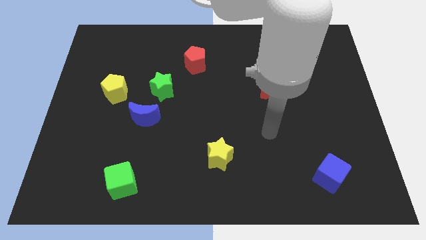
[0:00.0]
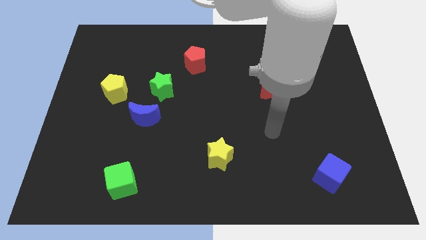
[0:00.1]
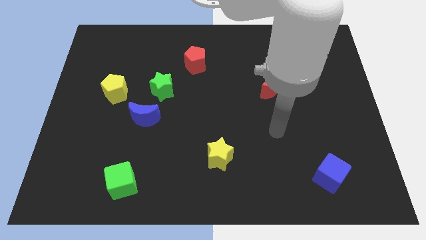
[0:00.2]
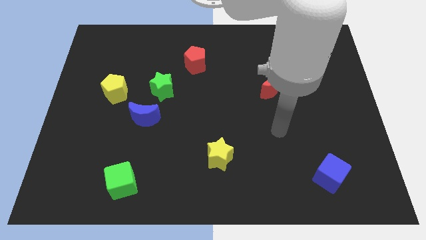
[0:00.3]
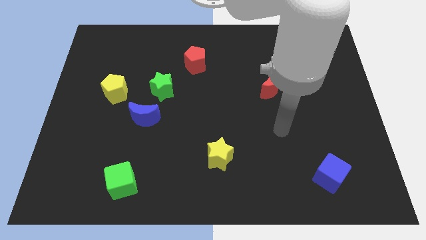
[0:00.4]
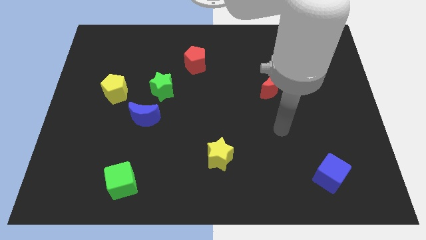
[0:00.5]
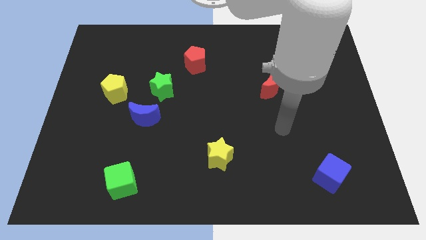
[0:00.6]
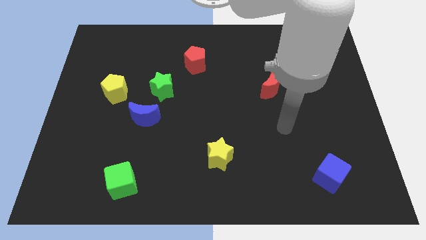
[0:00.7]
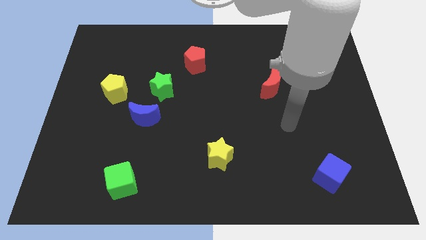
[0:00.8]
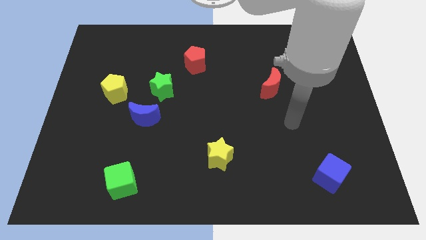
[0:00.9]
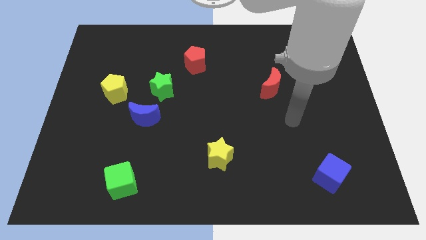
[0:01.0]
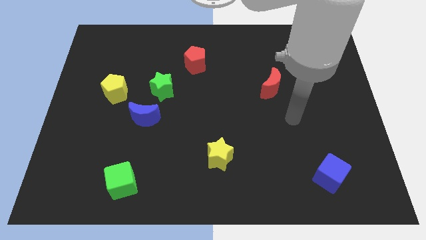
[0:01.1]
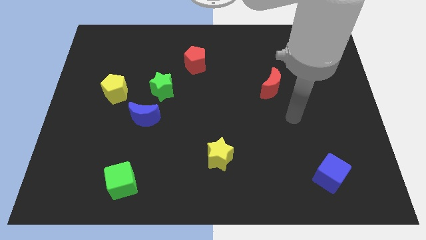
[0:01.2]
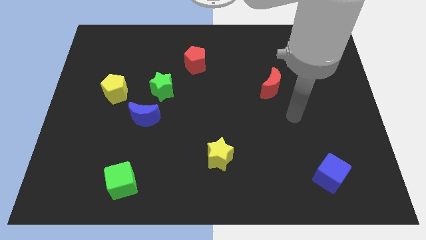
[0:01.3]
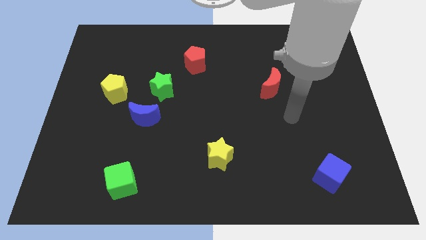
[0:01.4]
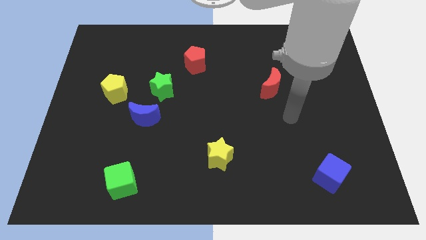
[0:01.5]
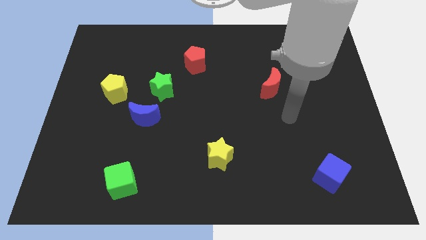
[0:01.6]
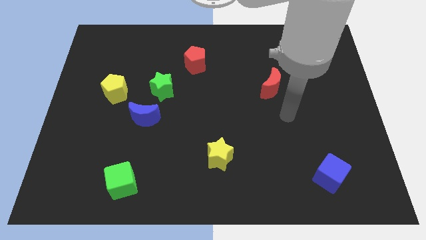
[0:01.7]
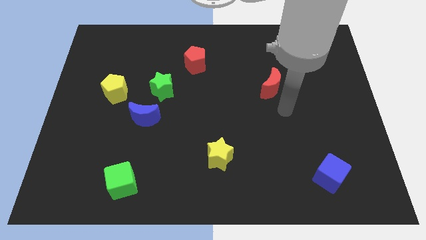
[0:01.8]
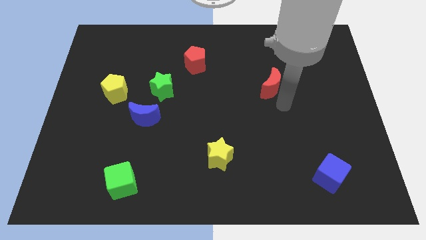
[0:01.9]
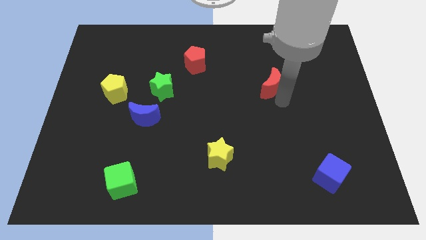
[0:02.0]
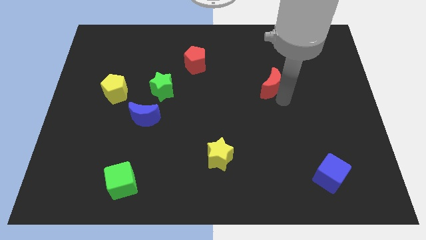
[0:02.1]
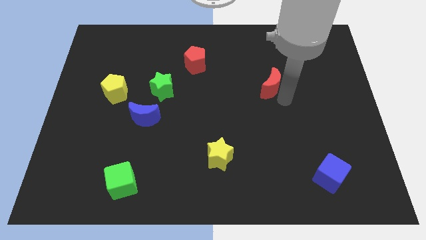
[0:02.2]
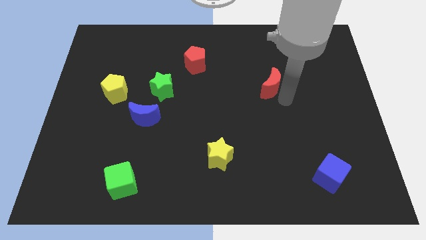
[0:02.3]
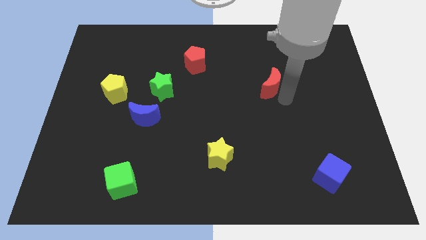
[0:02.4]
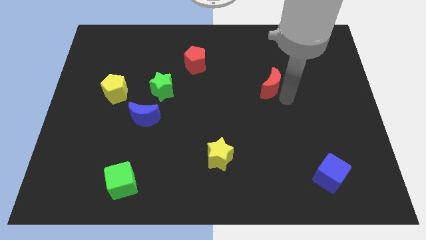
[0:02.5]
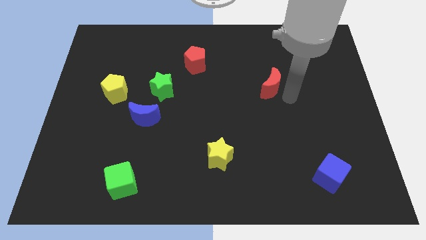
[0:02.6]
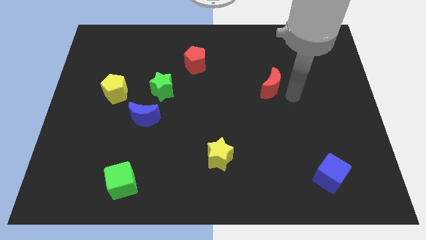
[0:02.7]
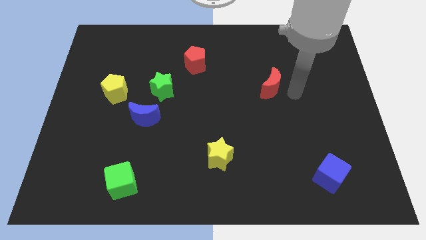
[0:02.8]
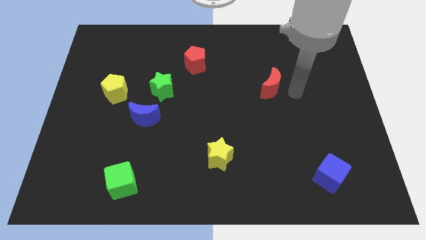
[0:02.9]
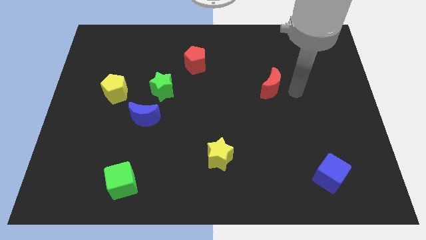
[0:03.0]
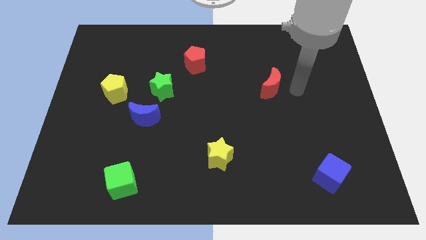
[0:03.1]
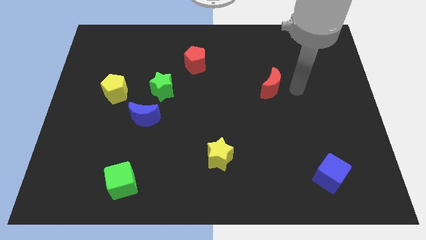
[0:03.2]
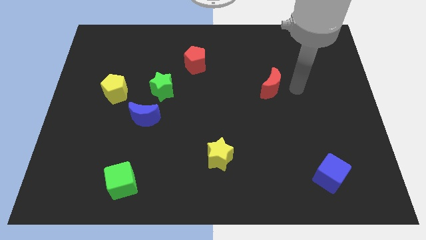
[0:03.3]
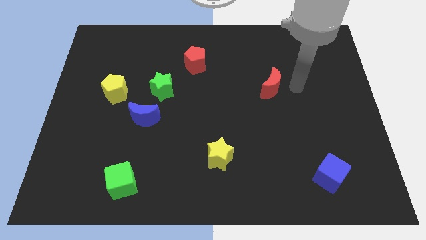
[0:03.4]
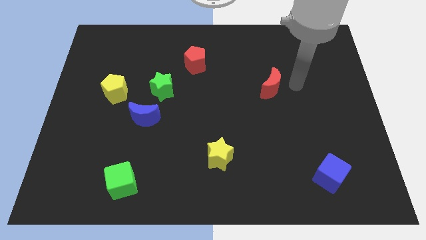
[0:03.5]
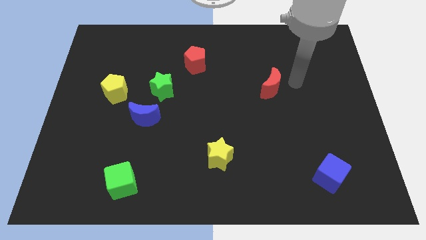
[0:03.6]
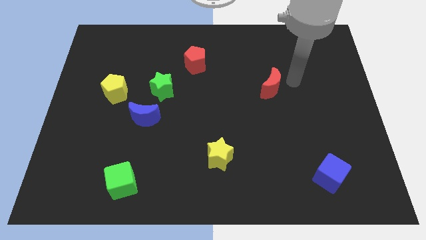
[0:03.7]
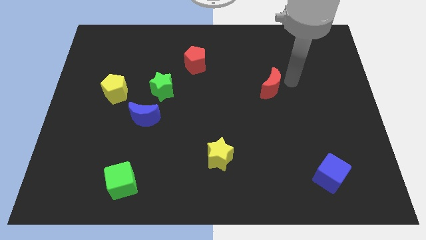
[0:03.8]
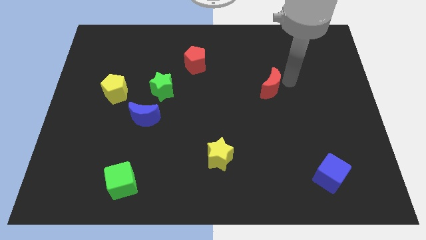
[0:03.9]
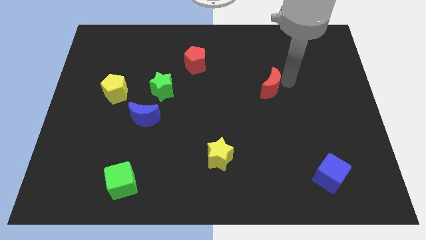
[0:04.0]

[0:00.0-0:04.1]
move your arm to the right side of the red crecent

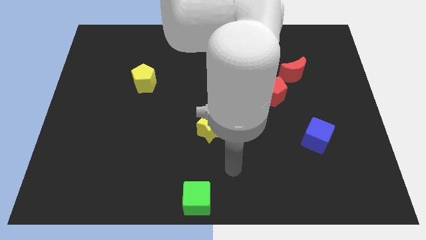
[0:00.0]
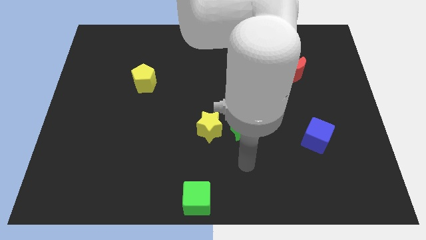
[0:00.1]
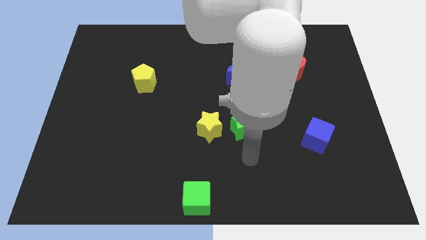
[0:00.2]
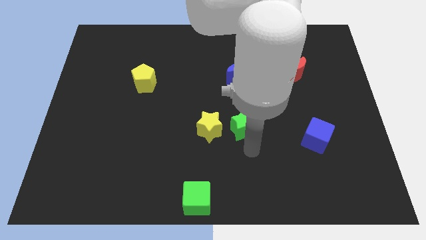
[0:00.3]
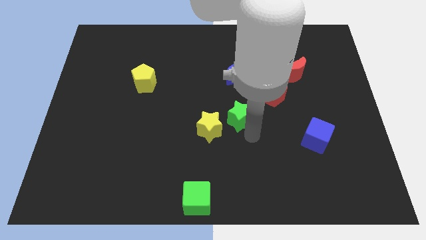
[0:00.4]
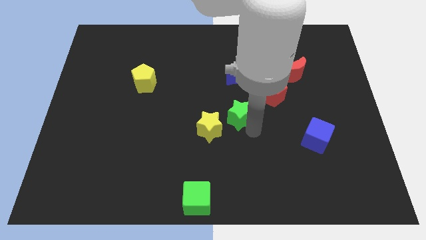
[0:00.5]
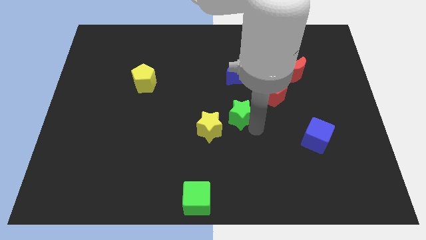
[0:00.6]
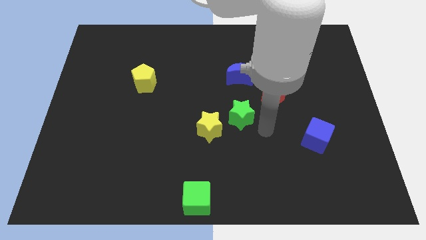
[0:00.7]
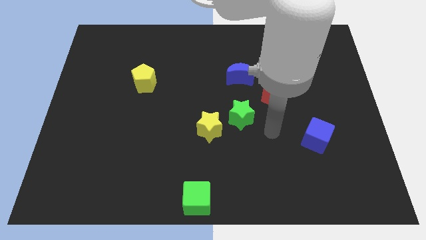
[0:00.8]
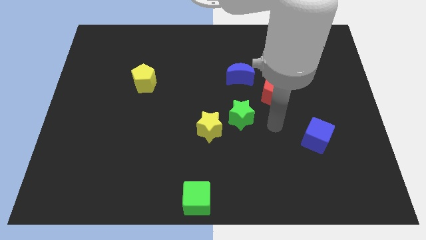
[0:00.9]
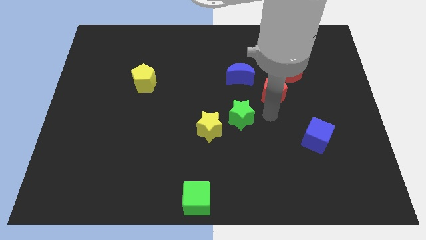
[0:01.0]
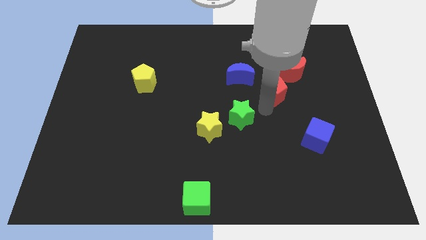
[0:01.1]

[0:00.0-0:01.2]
drag your arm towards green star

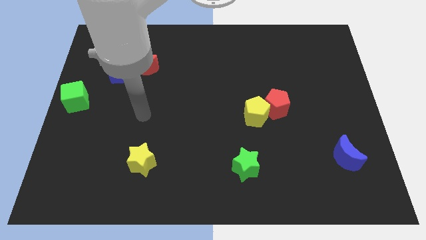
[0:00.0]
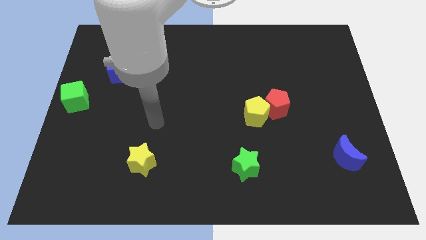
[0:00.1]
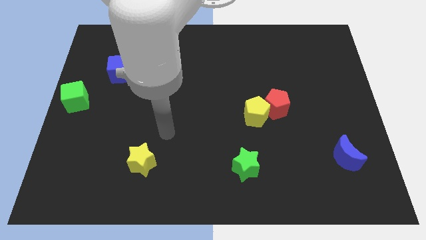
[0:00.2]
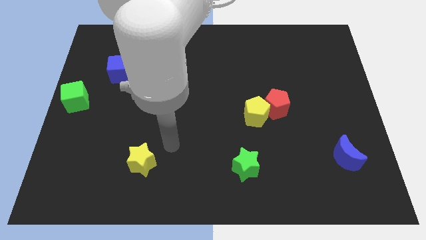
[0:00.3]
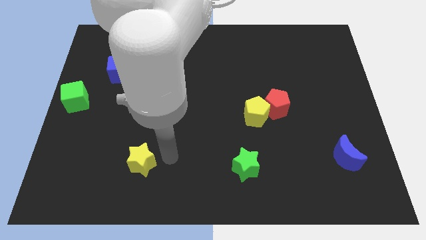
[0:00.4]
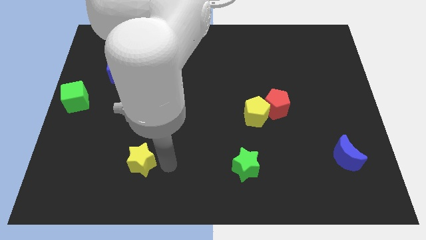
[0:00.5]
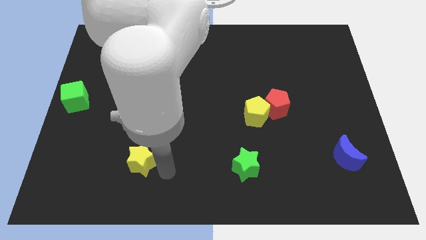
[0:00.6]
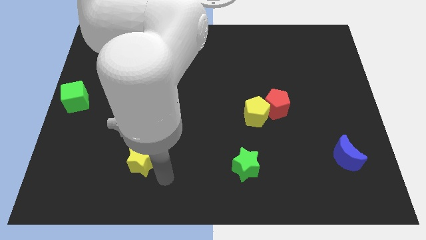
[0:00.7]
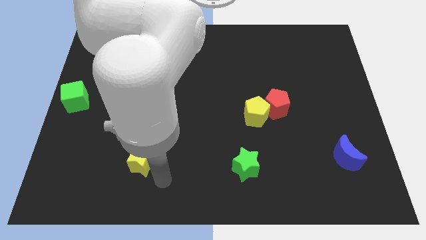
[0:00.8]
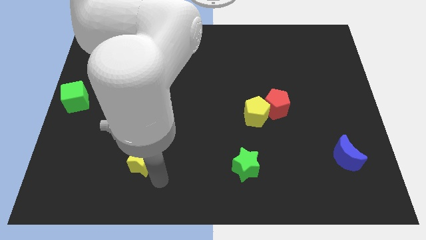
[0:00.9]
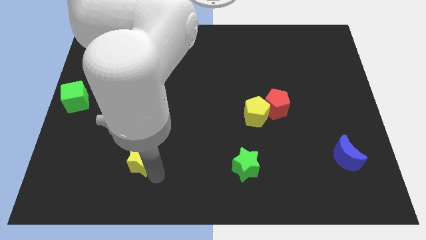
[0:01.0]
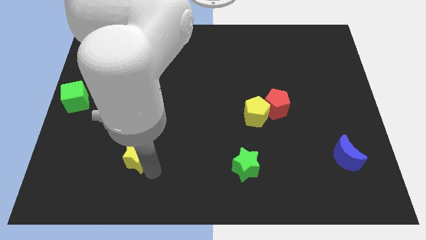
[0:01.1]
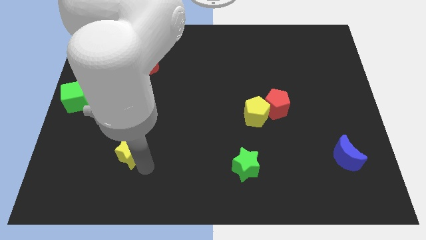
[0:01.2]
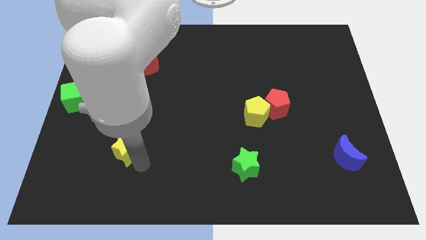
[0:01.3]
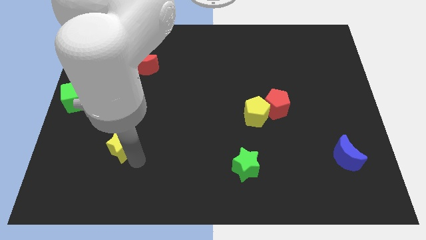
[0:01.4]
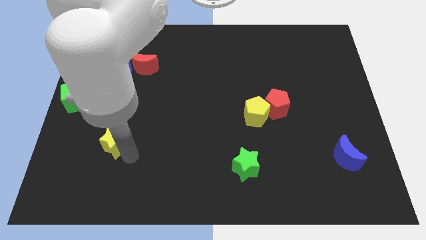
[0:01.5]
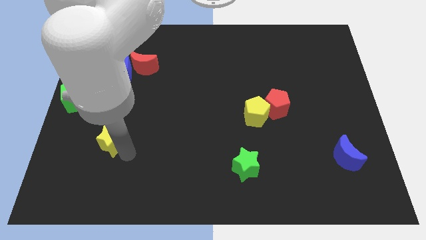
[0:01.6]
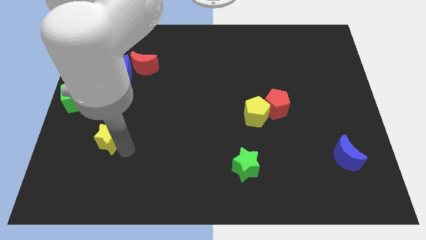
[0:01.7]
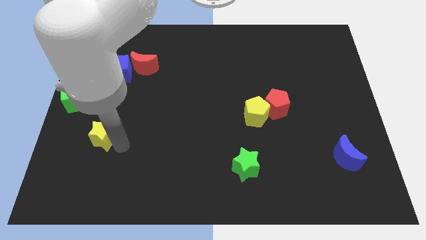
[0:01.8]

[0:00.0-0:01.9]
push the yellow star below blue cube

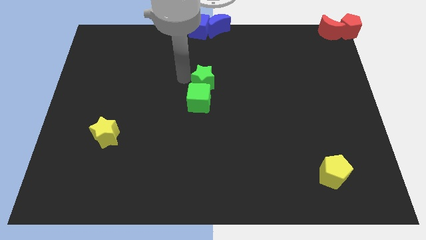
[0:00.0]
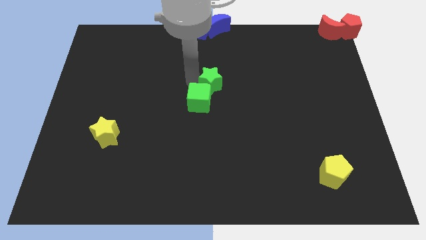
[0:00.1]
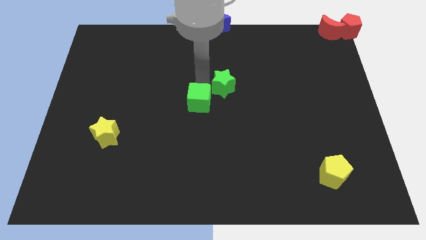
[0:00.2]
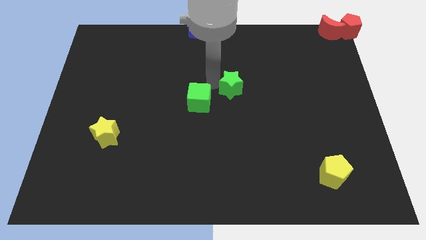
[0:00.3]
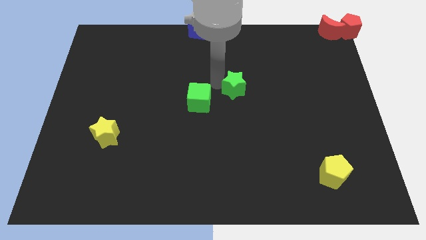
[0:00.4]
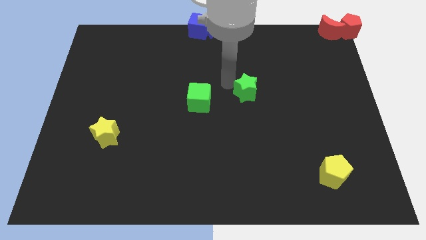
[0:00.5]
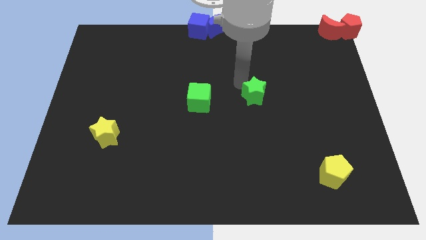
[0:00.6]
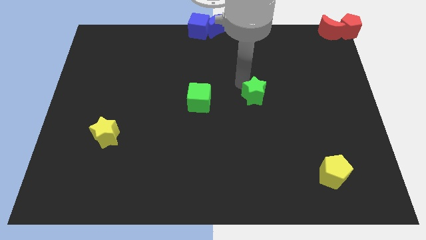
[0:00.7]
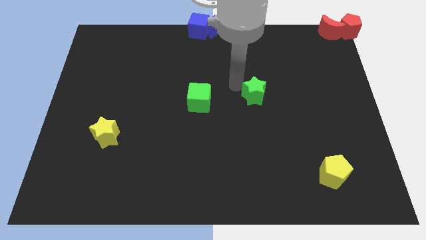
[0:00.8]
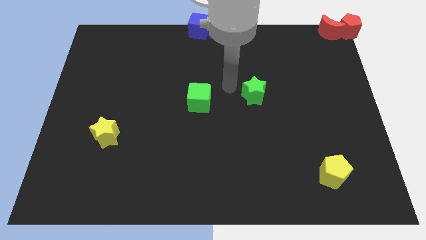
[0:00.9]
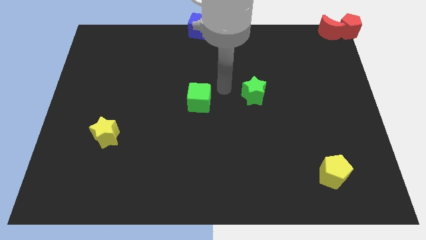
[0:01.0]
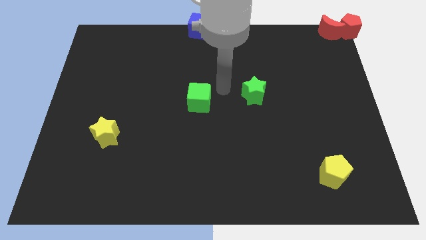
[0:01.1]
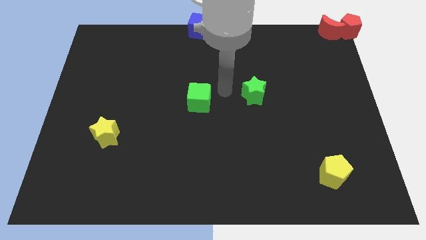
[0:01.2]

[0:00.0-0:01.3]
separate the green star from the green cube

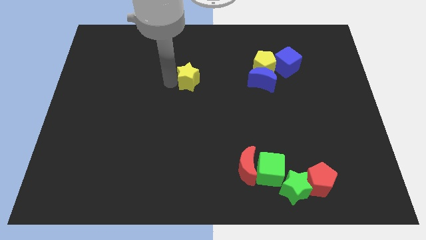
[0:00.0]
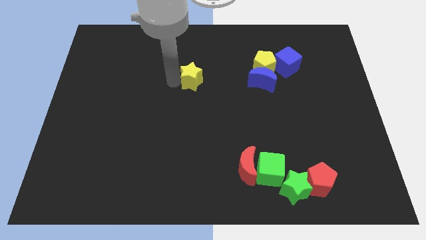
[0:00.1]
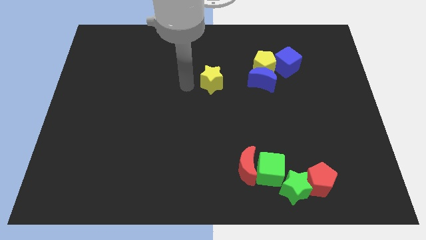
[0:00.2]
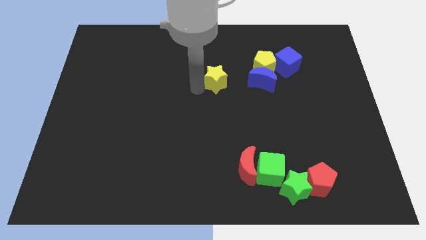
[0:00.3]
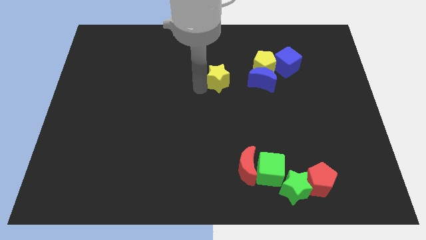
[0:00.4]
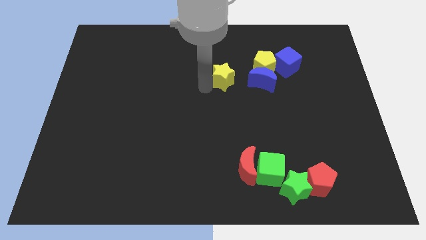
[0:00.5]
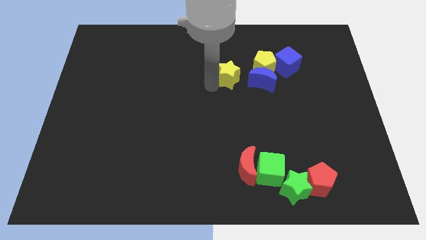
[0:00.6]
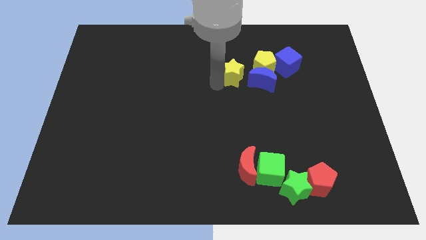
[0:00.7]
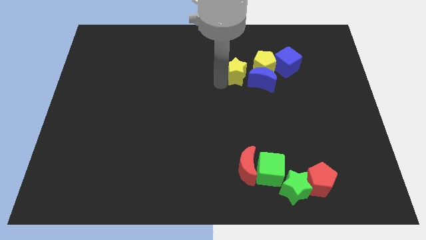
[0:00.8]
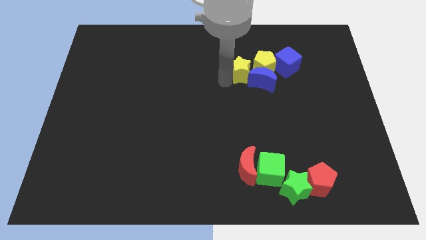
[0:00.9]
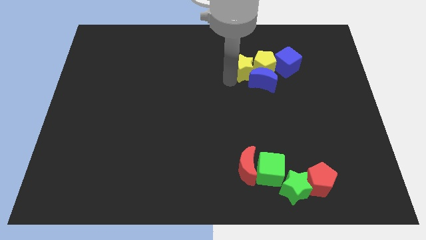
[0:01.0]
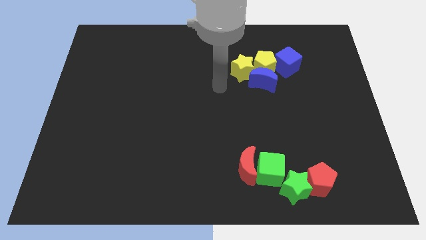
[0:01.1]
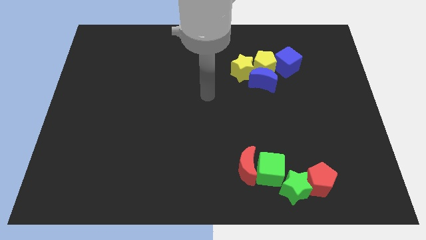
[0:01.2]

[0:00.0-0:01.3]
push the yellow star into the group of blocks
